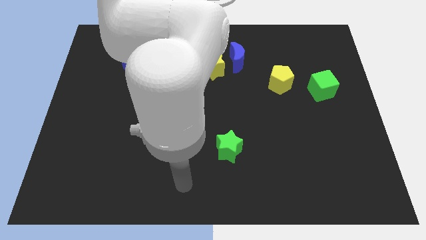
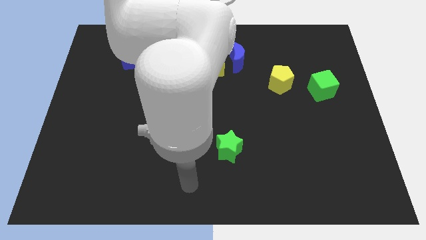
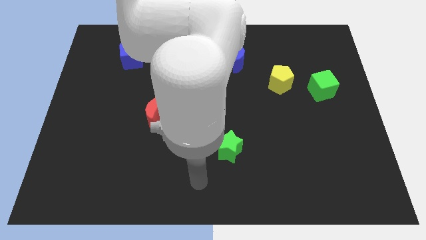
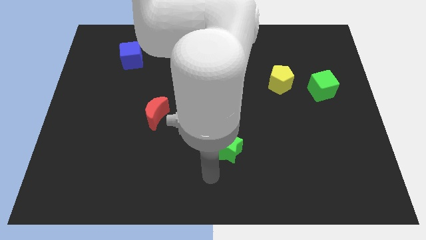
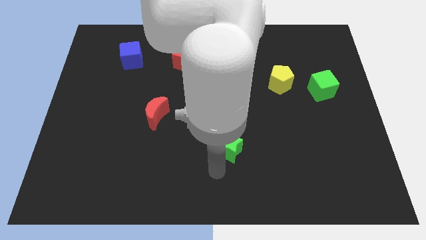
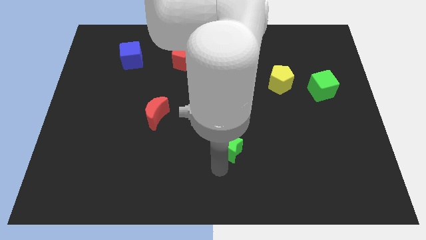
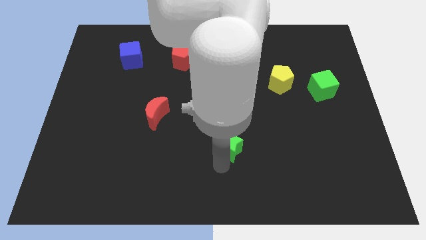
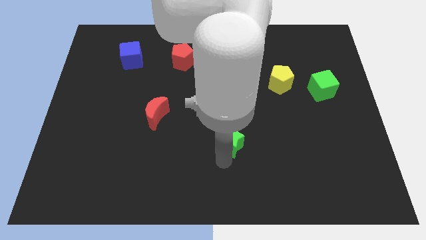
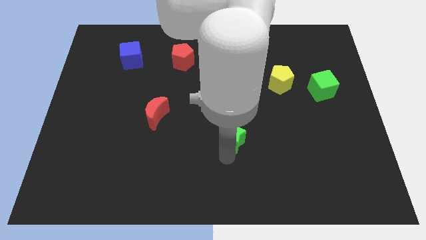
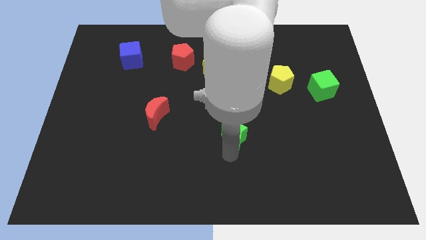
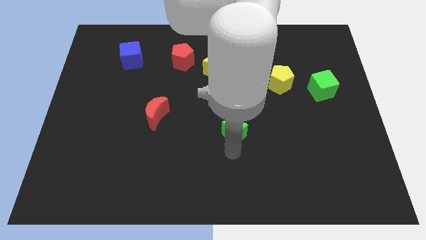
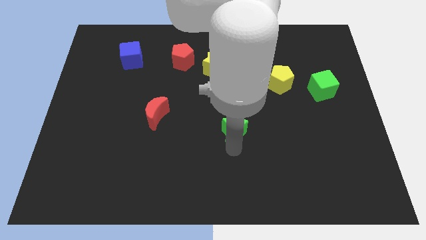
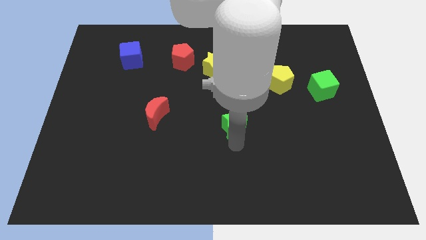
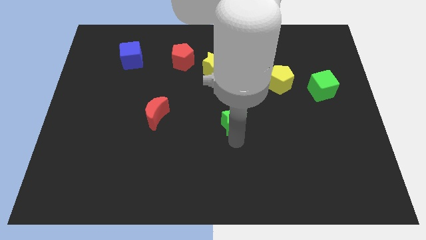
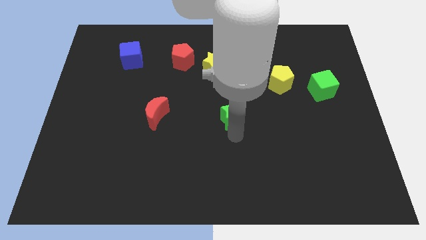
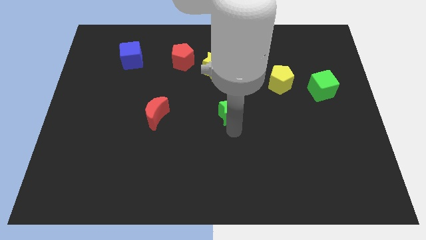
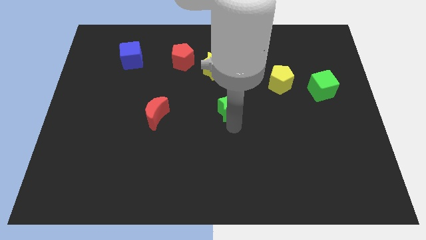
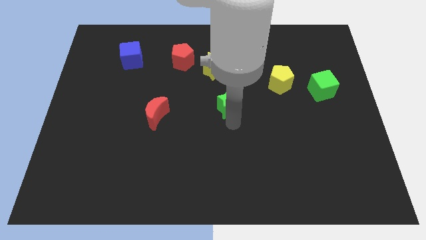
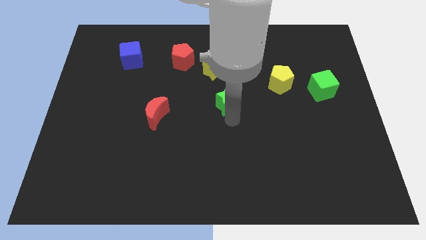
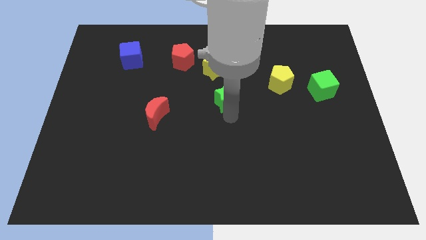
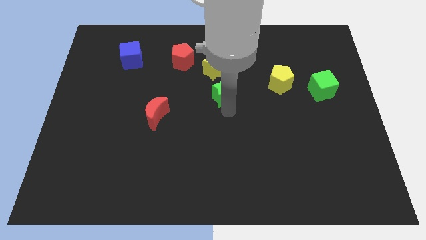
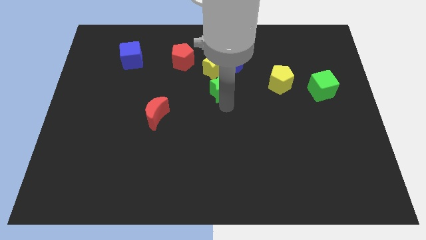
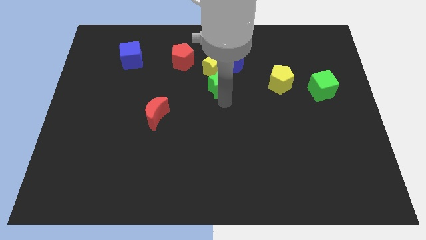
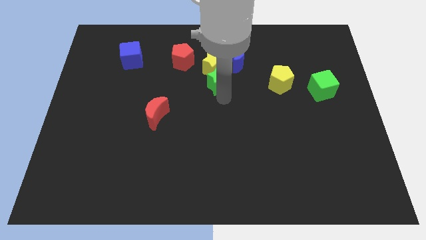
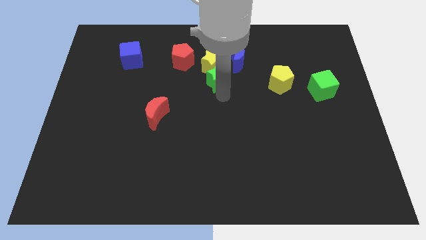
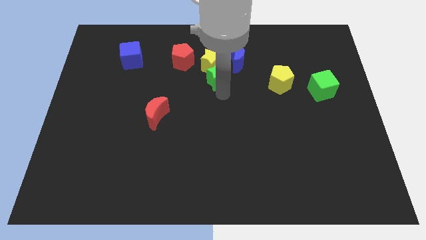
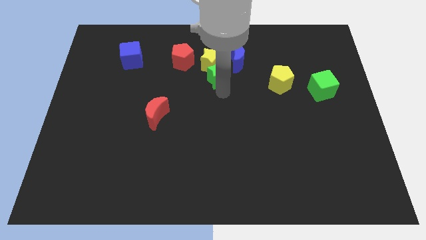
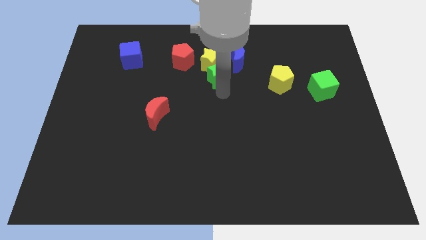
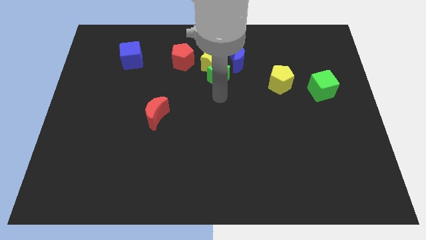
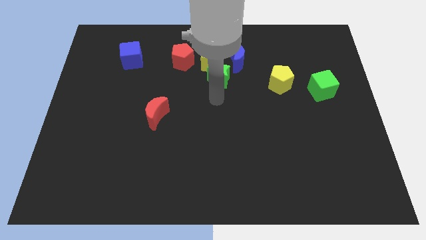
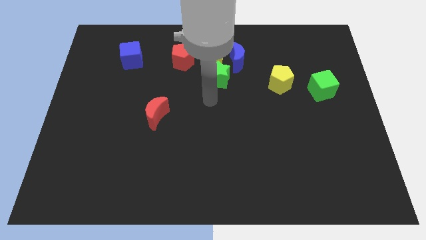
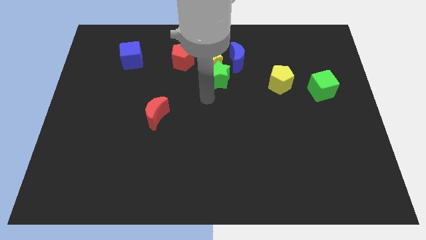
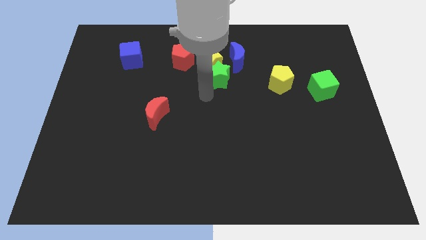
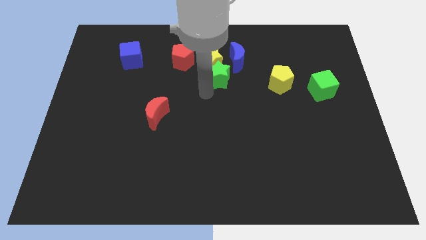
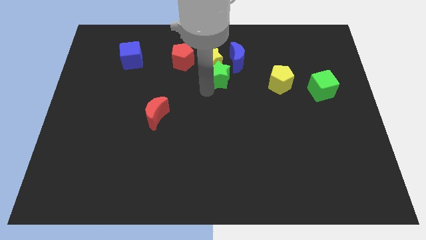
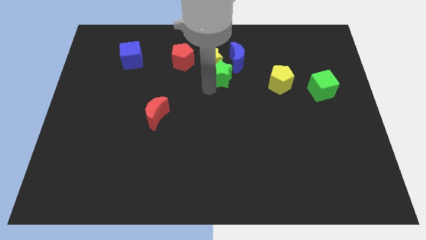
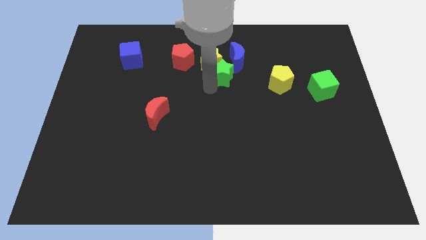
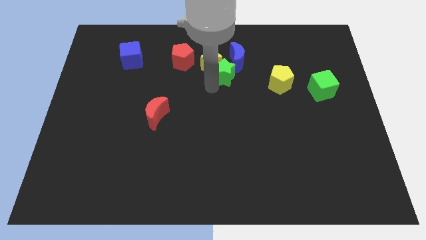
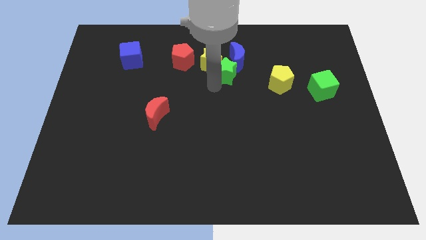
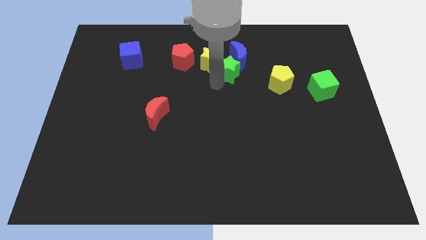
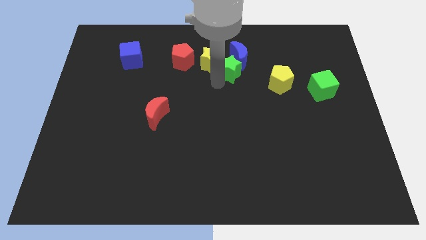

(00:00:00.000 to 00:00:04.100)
push the green star next to the blue moon

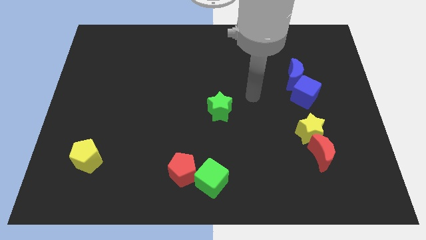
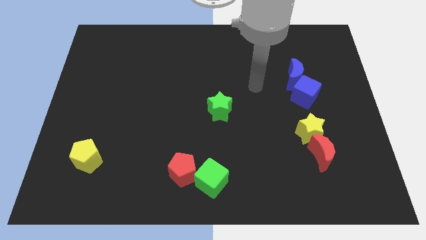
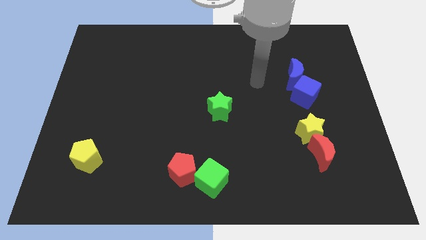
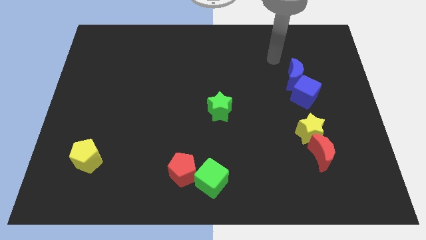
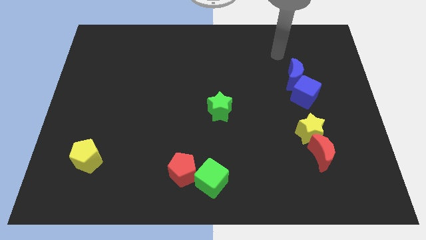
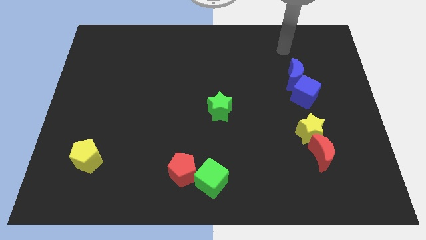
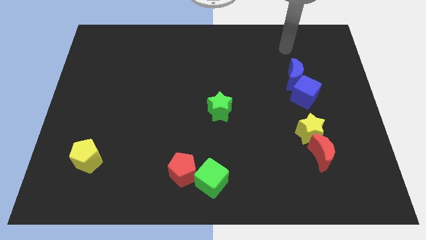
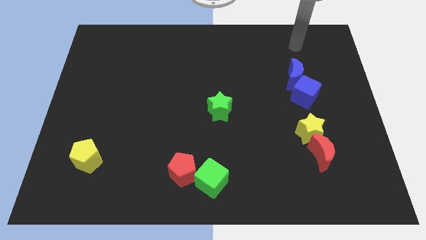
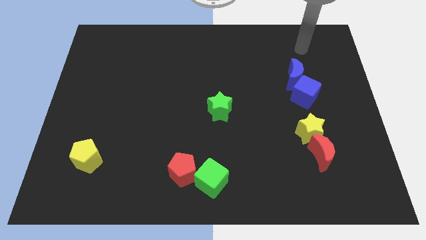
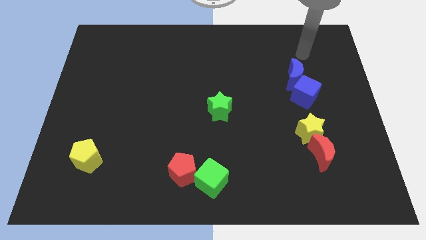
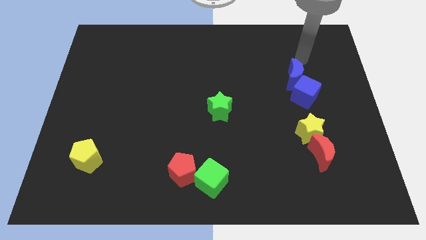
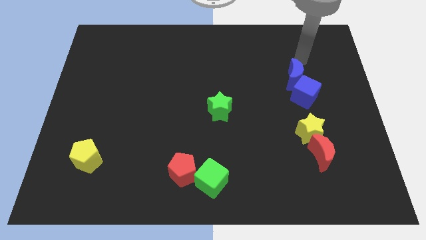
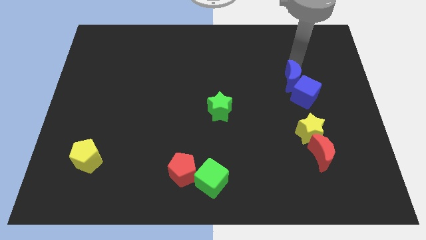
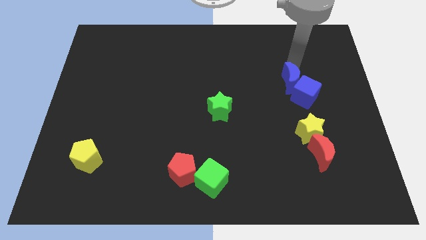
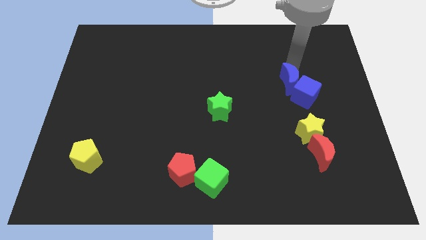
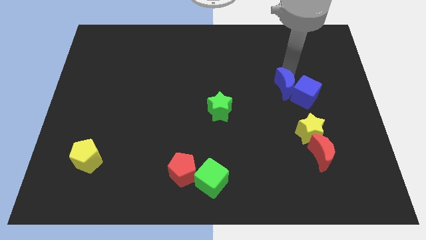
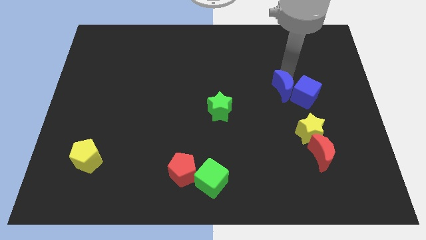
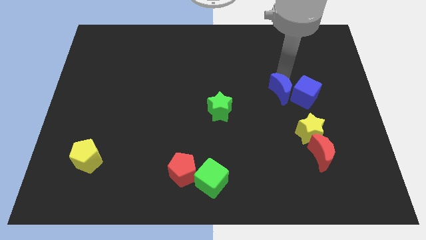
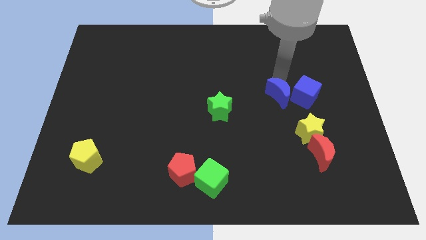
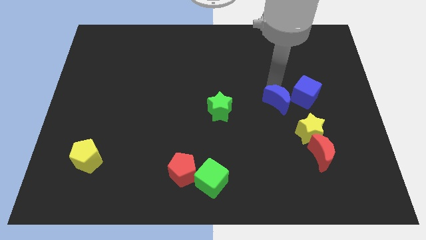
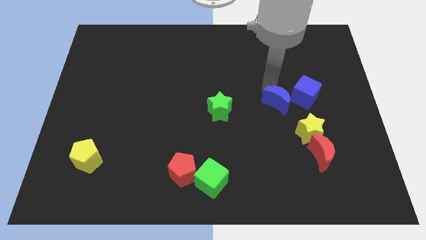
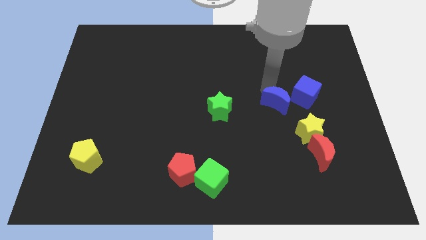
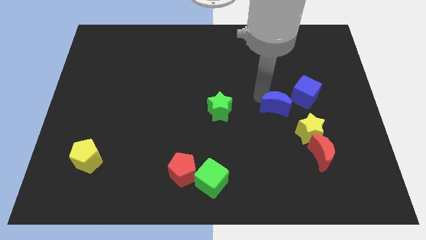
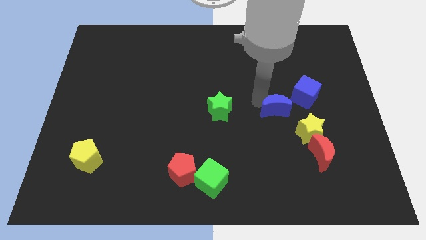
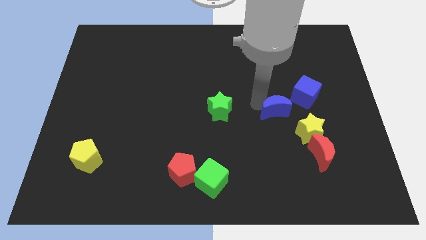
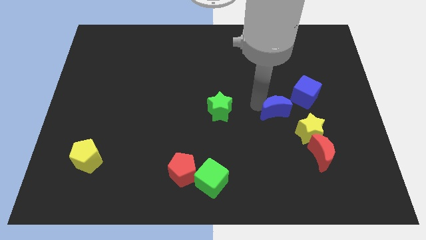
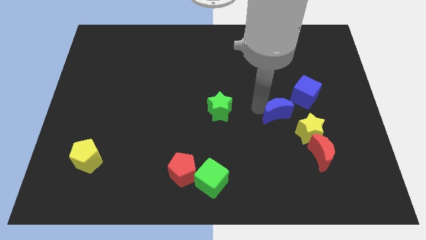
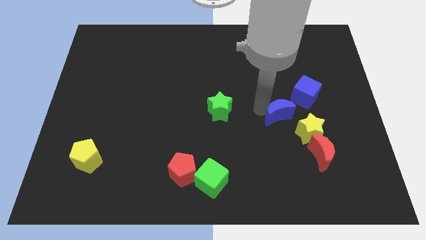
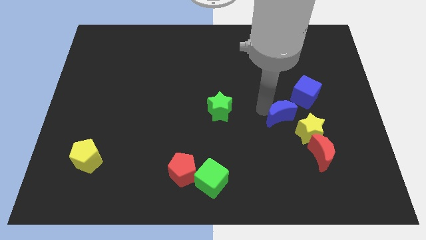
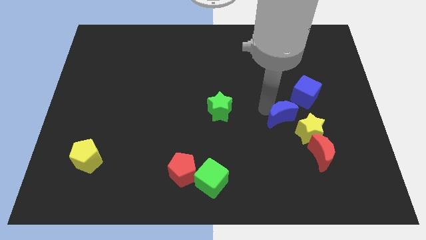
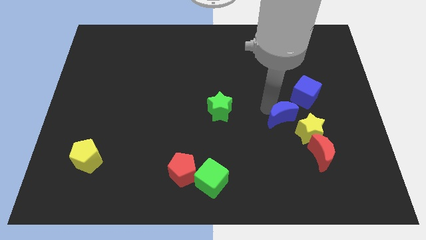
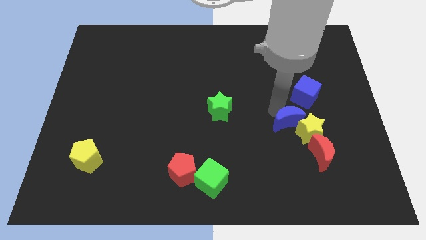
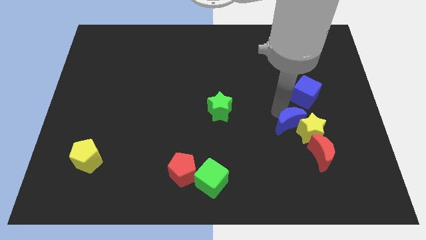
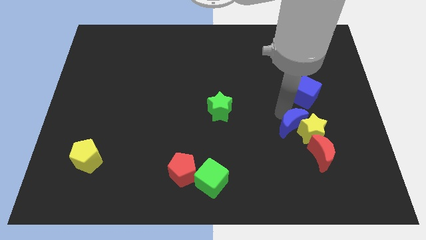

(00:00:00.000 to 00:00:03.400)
push the blue moon towards the yellow star

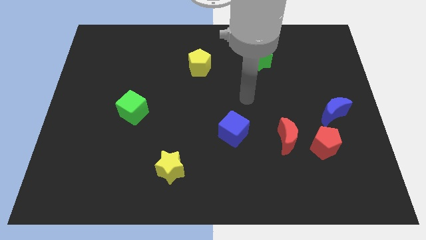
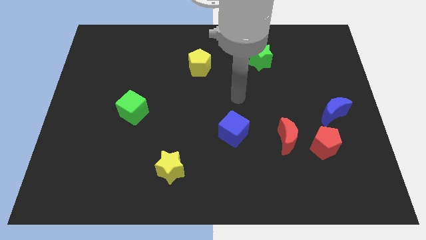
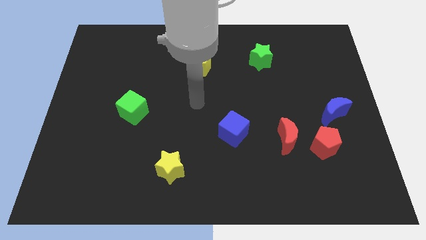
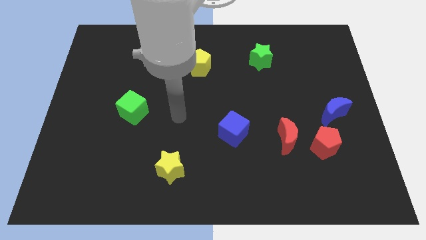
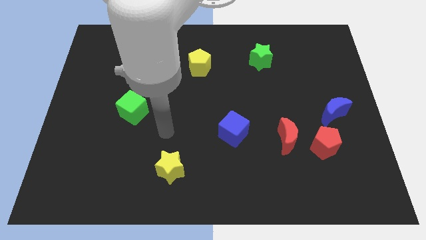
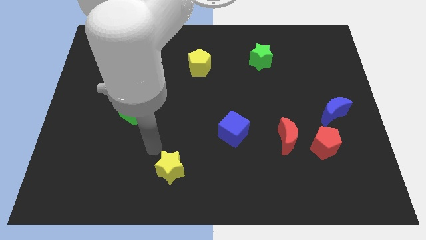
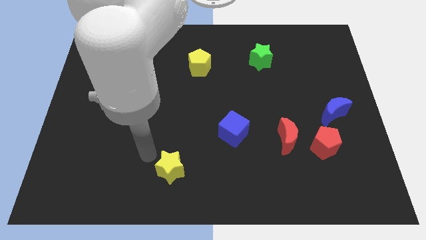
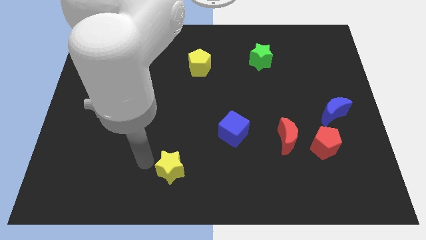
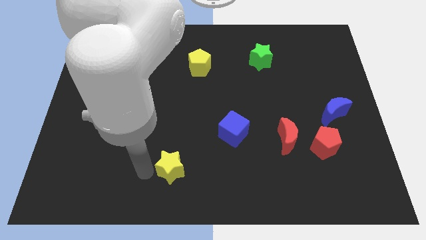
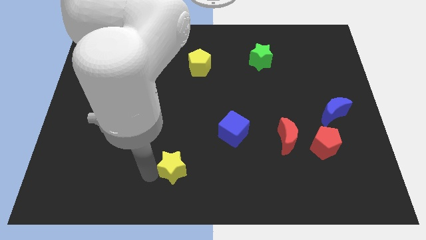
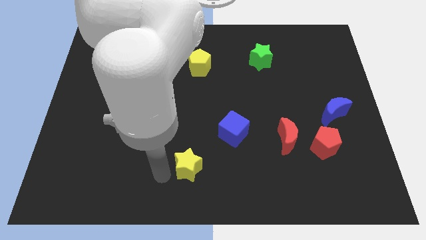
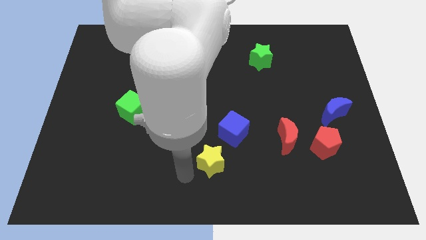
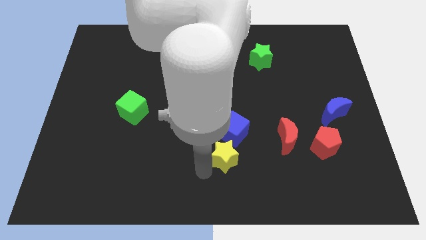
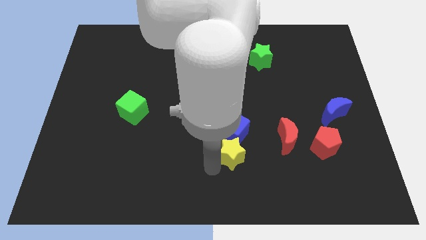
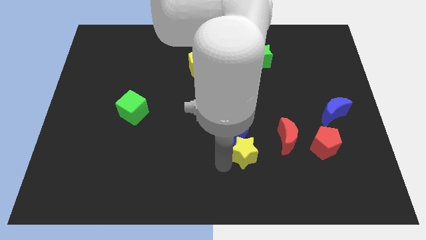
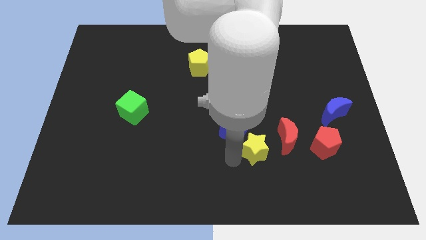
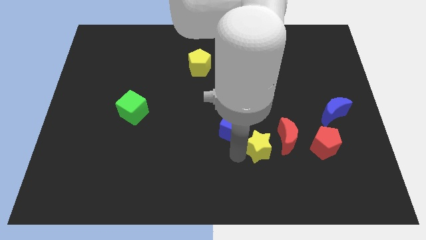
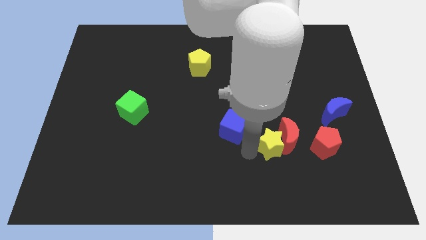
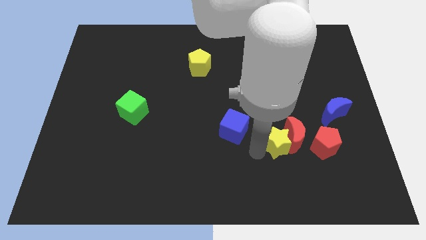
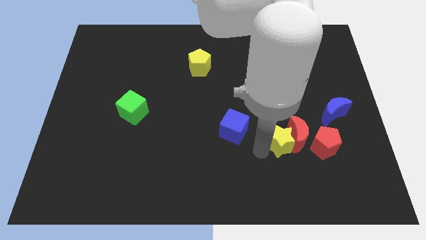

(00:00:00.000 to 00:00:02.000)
move the yellow star to the red moon
